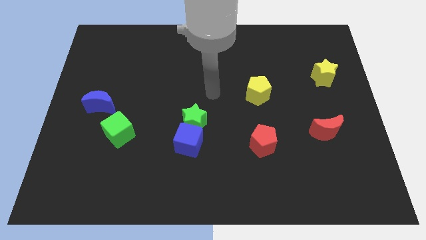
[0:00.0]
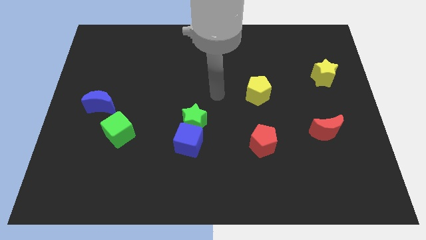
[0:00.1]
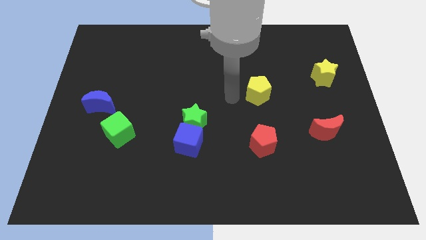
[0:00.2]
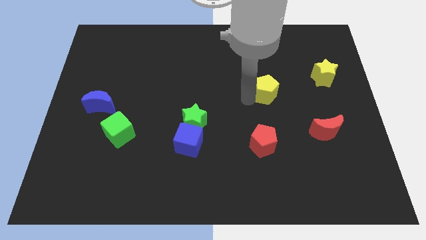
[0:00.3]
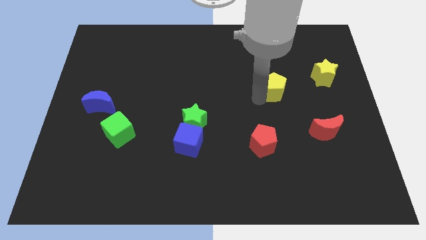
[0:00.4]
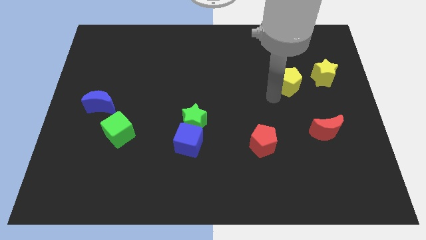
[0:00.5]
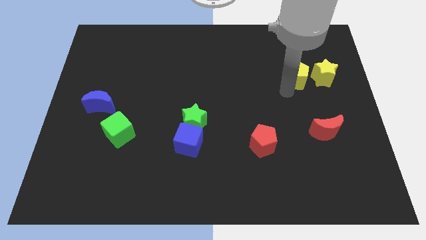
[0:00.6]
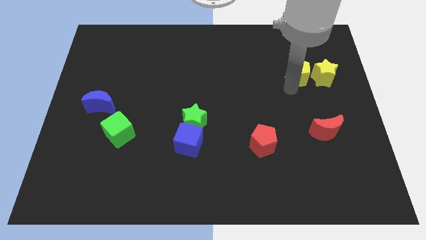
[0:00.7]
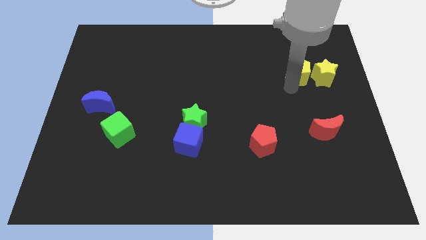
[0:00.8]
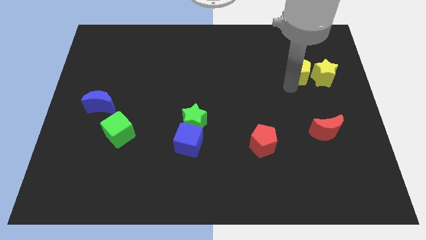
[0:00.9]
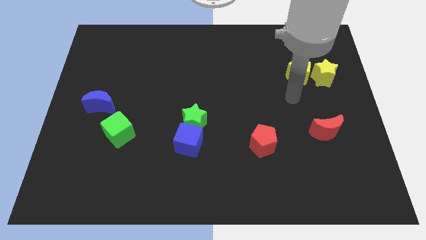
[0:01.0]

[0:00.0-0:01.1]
move the yellow pentagon diagonal to the left of the yellow star

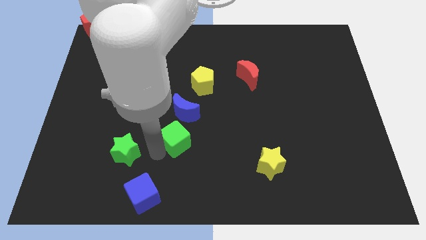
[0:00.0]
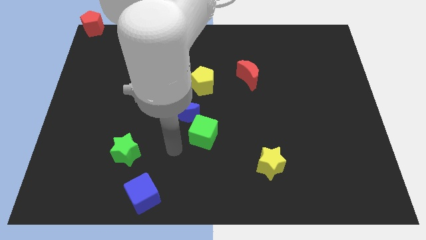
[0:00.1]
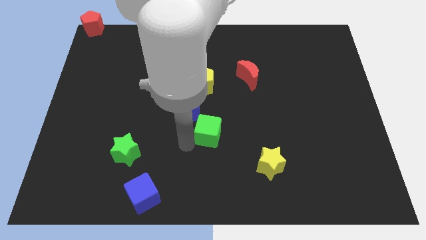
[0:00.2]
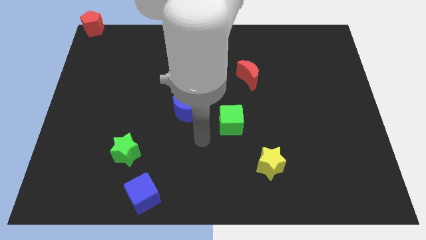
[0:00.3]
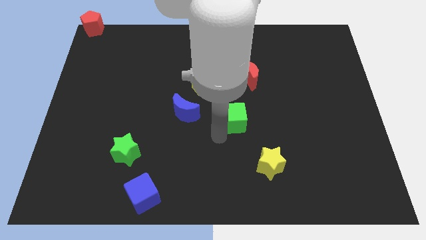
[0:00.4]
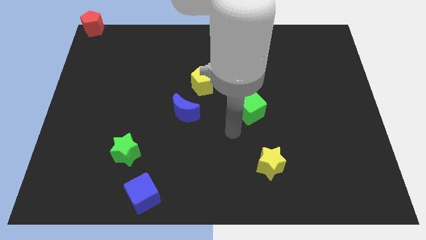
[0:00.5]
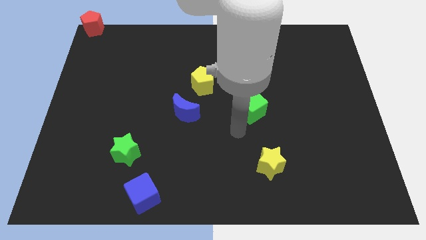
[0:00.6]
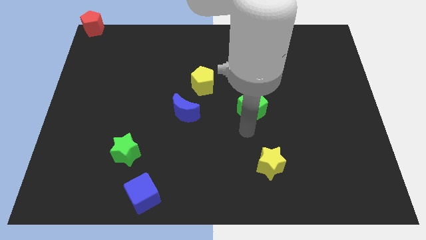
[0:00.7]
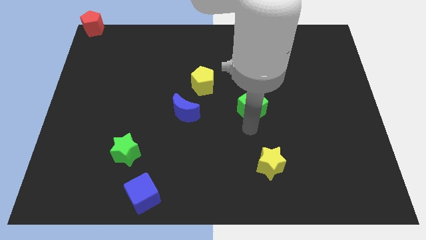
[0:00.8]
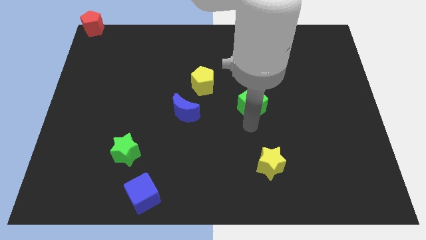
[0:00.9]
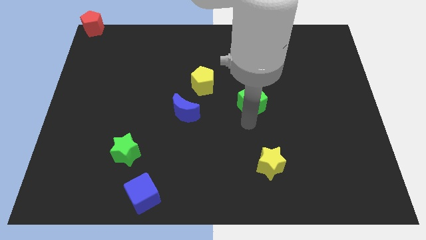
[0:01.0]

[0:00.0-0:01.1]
place the green cube below the red moon

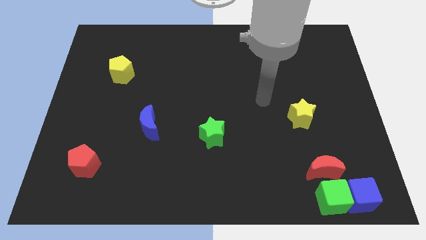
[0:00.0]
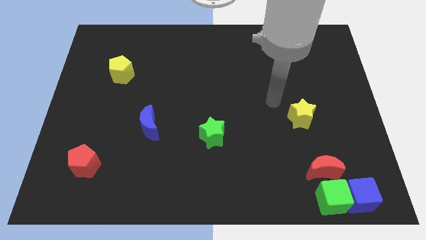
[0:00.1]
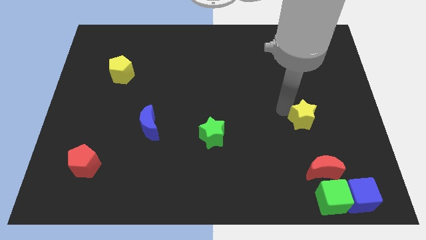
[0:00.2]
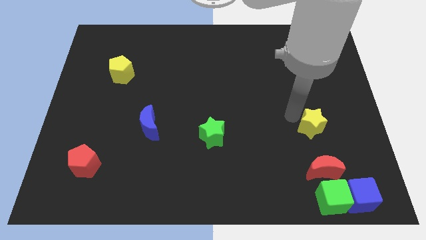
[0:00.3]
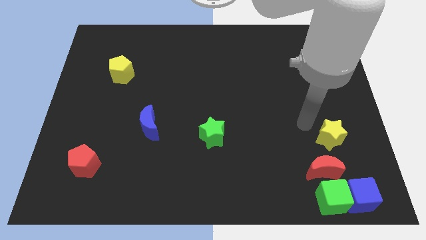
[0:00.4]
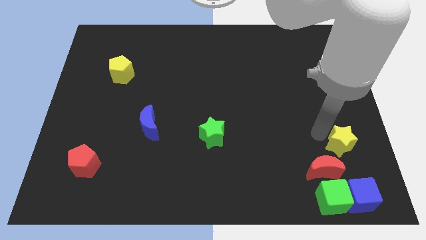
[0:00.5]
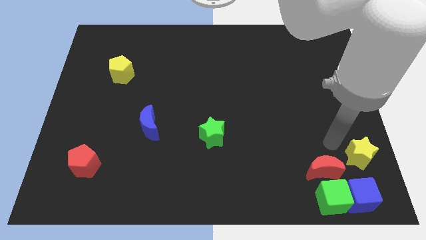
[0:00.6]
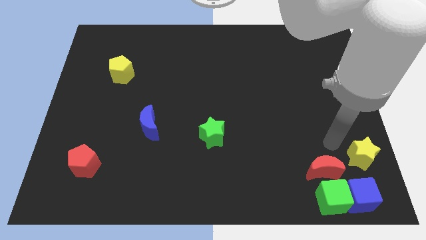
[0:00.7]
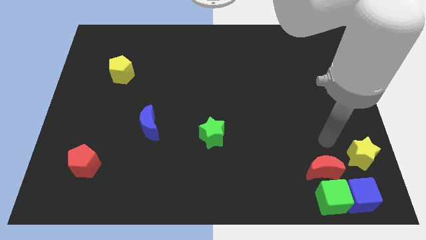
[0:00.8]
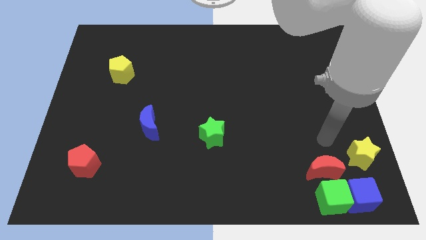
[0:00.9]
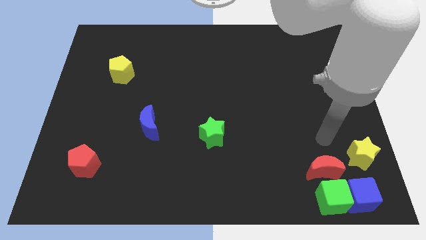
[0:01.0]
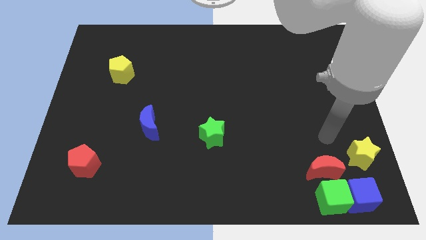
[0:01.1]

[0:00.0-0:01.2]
move the yellow star to the right of the red crescent

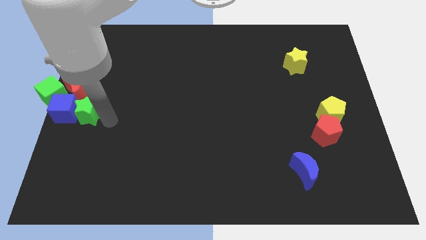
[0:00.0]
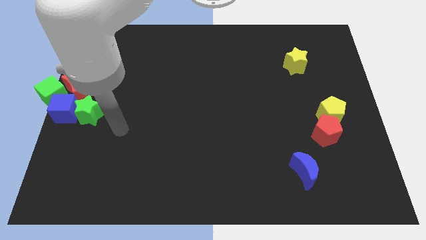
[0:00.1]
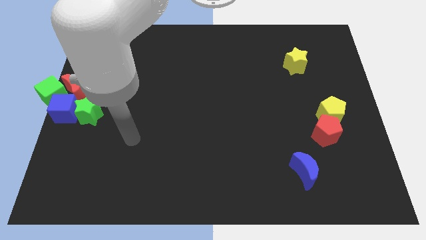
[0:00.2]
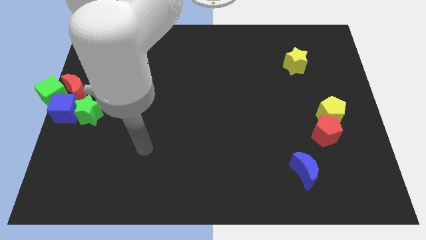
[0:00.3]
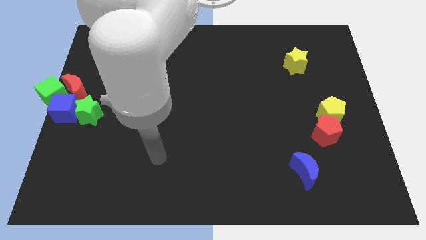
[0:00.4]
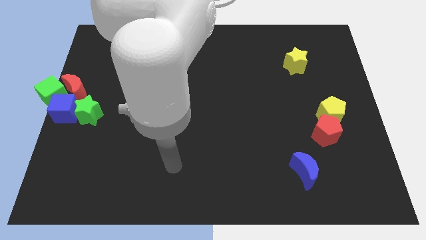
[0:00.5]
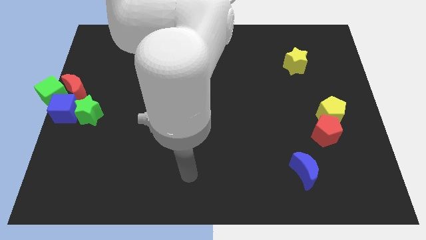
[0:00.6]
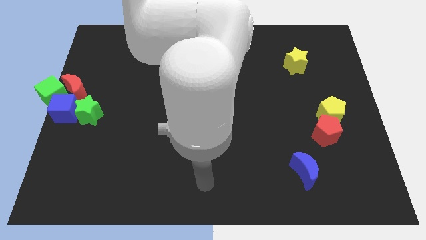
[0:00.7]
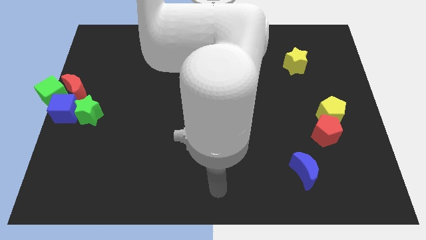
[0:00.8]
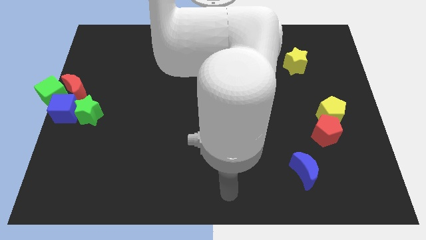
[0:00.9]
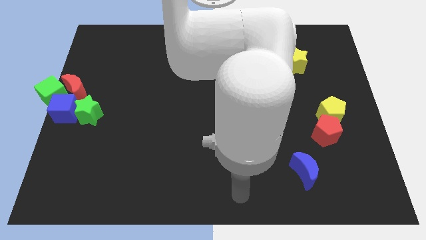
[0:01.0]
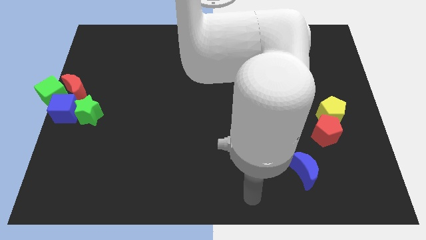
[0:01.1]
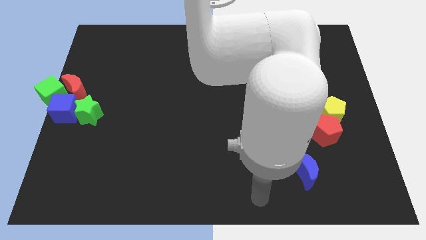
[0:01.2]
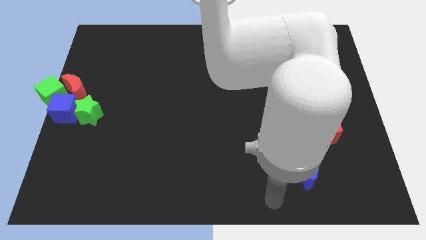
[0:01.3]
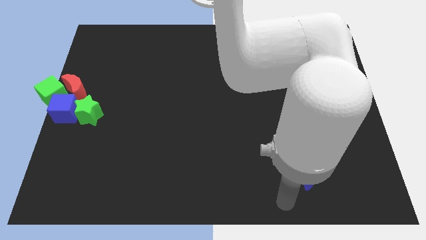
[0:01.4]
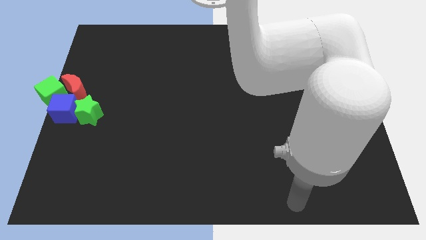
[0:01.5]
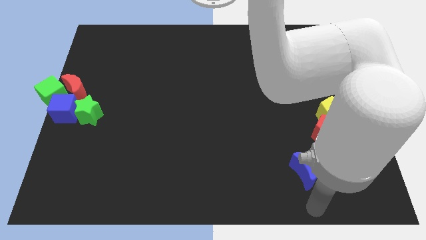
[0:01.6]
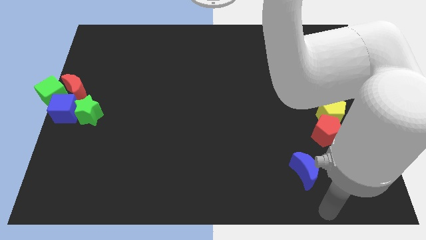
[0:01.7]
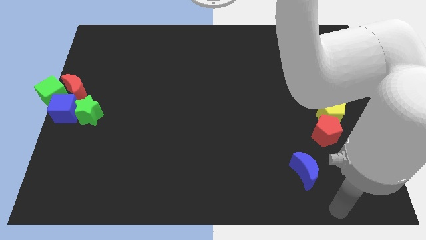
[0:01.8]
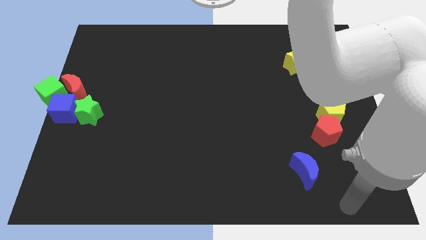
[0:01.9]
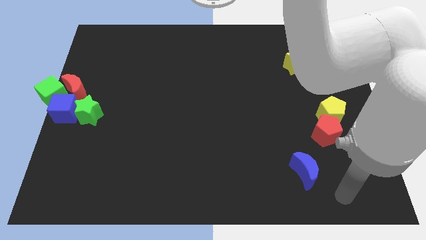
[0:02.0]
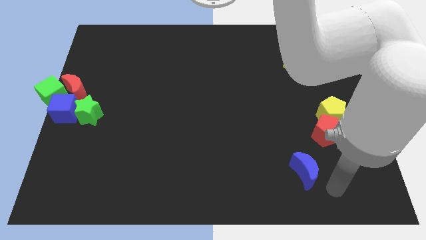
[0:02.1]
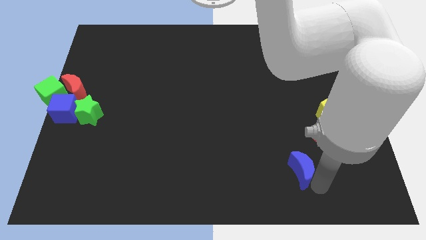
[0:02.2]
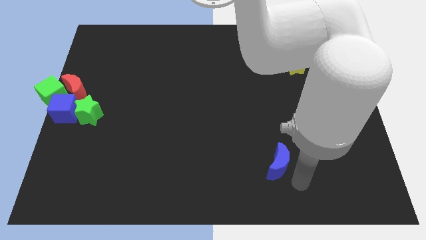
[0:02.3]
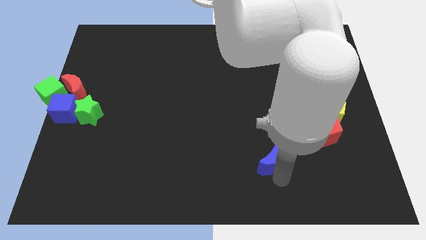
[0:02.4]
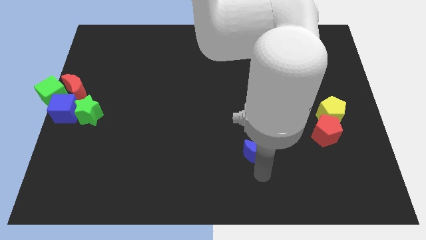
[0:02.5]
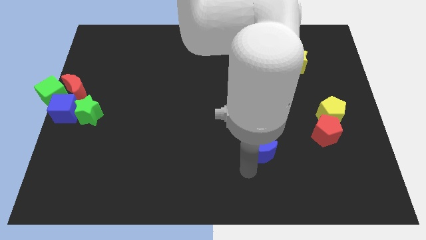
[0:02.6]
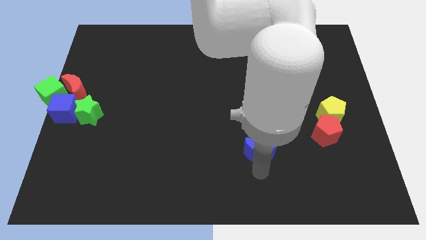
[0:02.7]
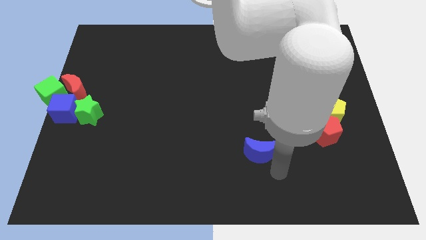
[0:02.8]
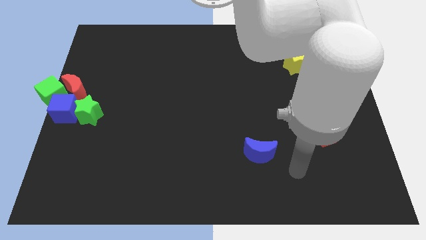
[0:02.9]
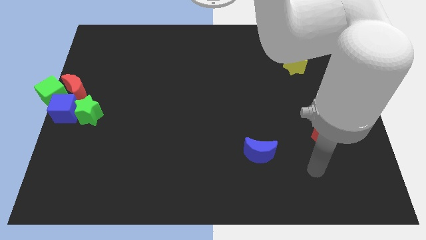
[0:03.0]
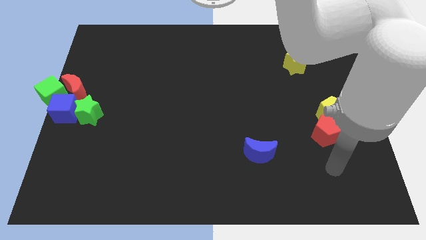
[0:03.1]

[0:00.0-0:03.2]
push the blue moon to the bottom center

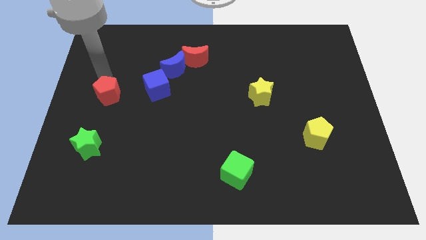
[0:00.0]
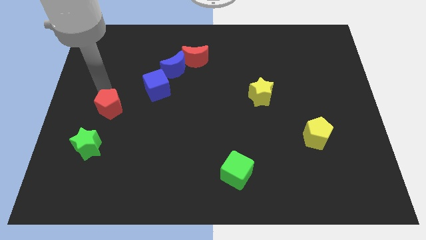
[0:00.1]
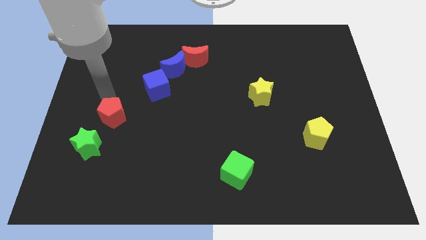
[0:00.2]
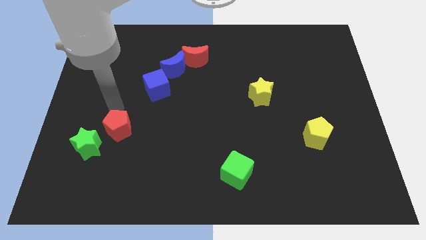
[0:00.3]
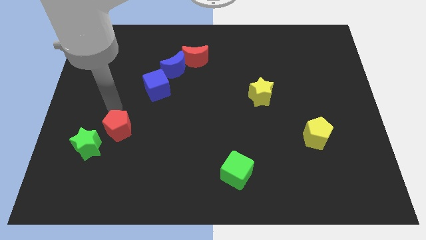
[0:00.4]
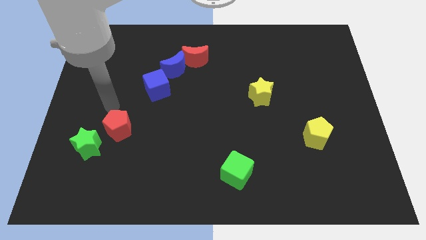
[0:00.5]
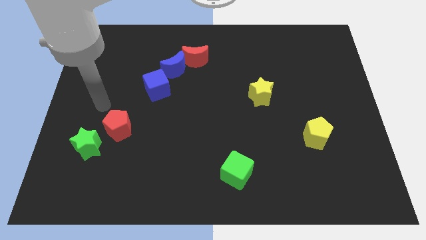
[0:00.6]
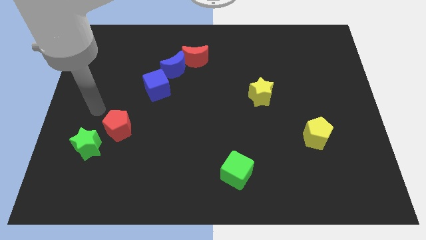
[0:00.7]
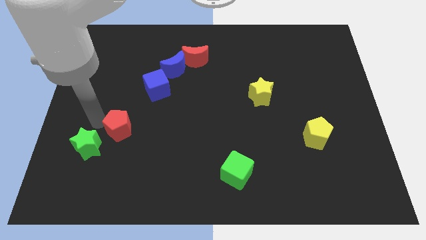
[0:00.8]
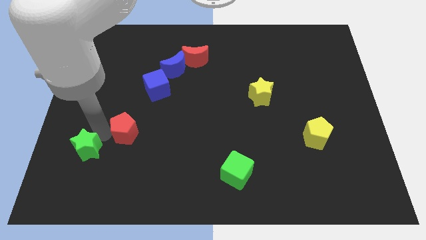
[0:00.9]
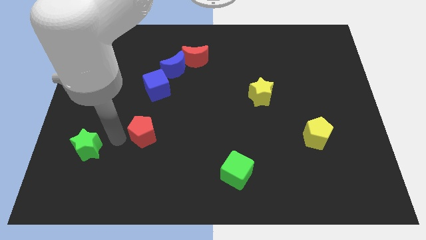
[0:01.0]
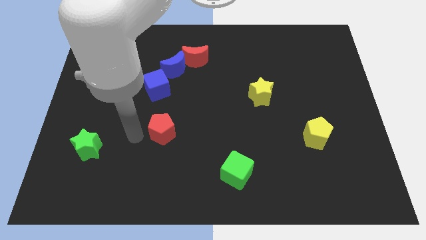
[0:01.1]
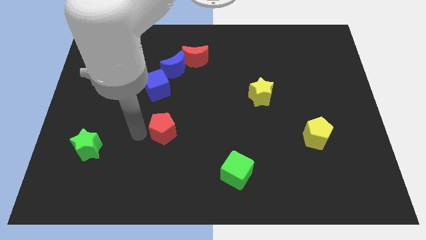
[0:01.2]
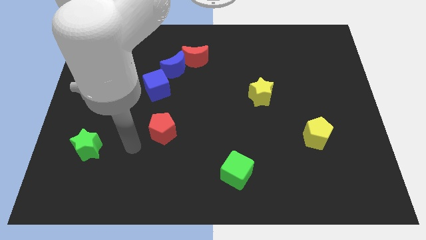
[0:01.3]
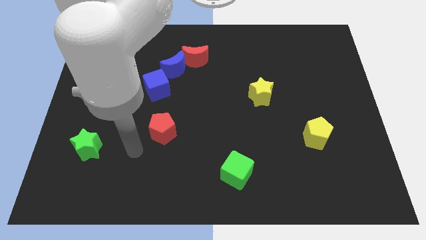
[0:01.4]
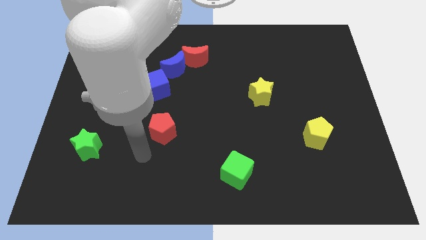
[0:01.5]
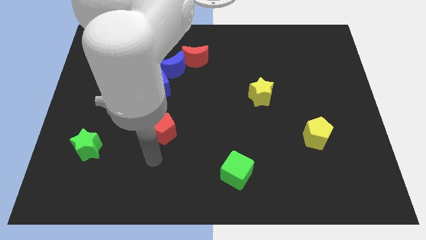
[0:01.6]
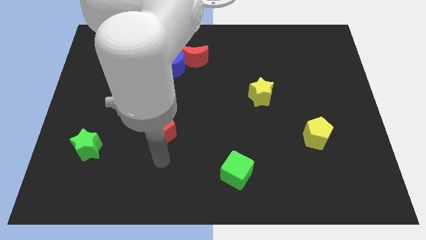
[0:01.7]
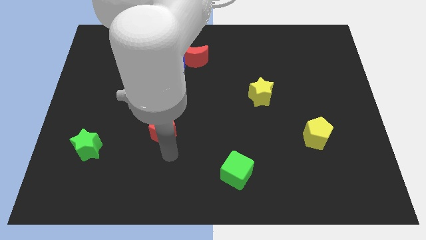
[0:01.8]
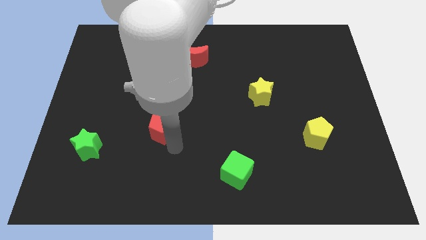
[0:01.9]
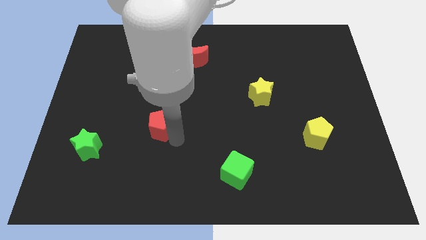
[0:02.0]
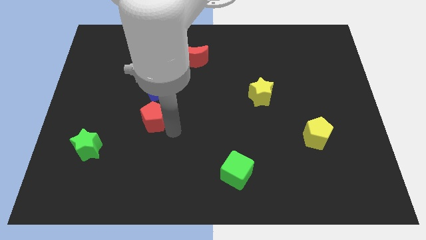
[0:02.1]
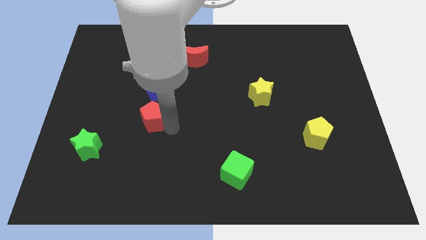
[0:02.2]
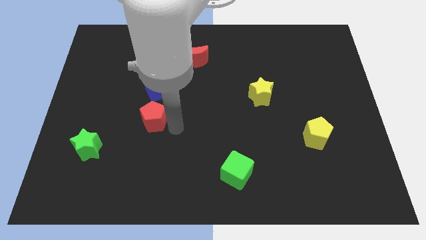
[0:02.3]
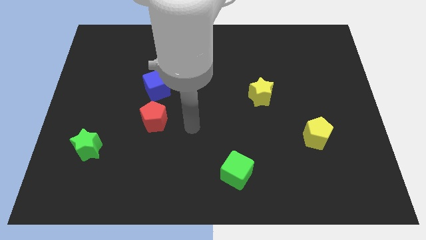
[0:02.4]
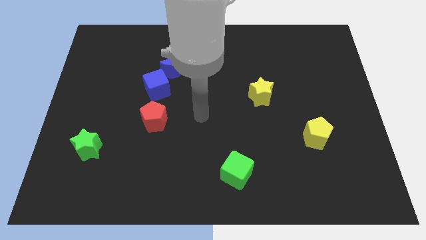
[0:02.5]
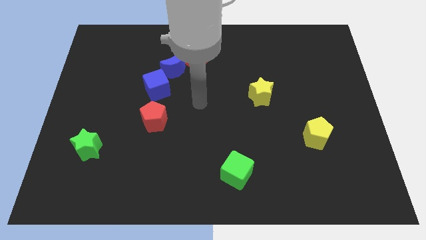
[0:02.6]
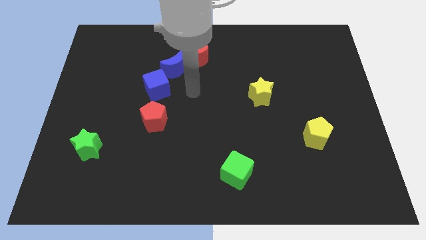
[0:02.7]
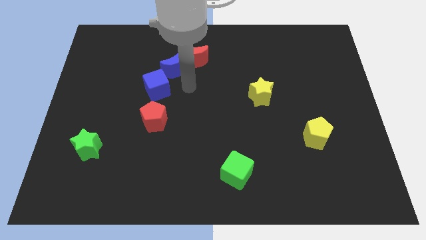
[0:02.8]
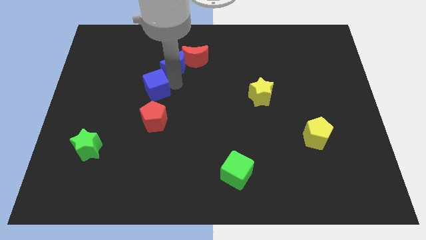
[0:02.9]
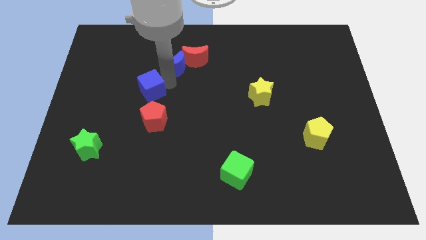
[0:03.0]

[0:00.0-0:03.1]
move the red pentagon vertically below the blue cube
